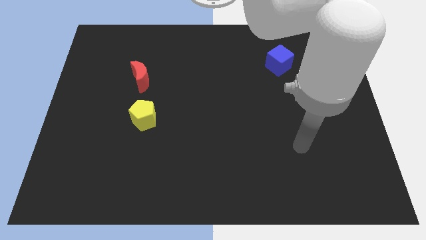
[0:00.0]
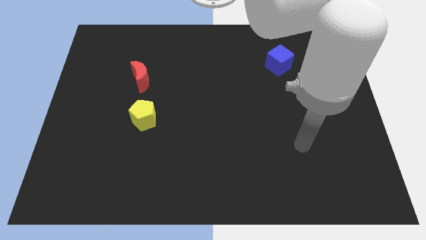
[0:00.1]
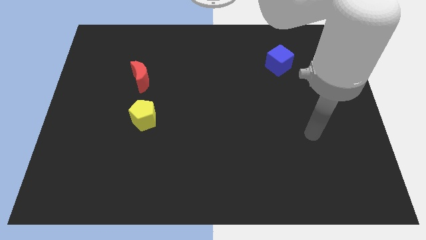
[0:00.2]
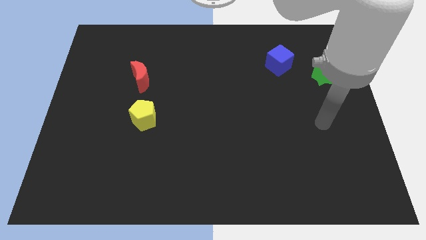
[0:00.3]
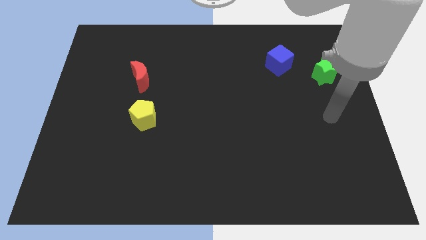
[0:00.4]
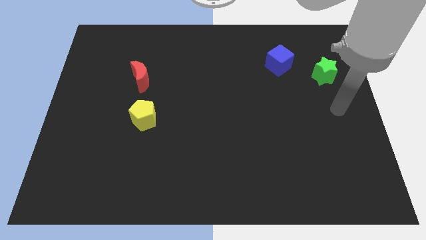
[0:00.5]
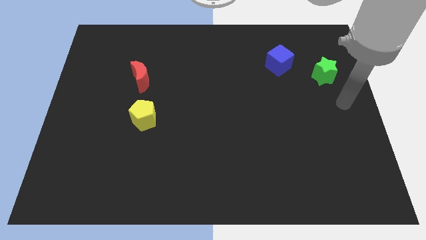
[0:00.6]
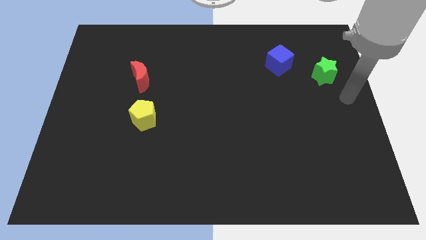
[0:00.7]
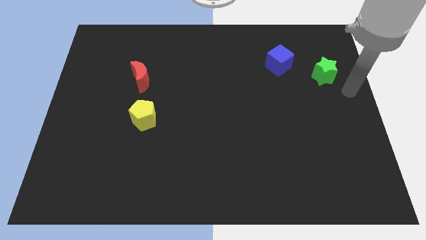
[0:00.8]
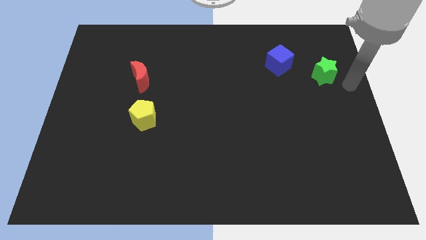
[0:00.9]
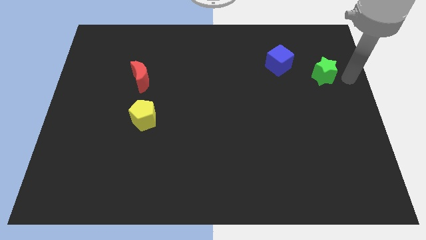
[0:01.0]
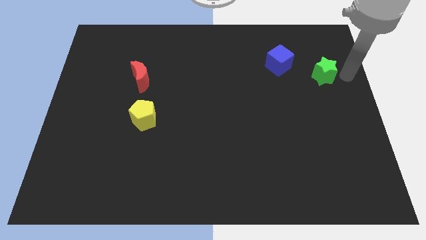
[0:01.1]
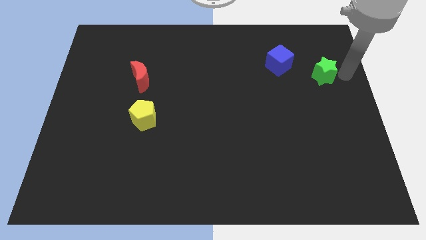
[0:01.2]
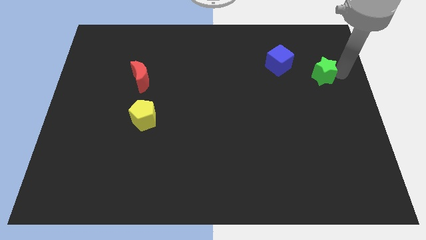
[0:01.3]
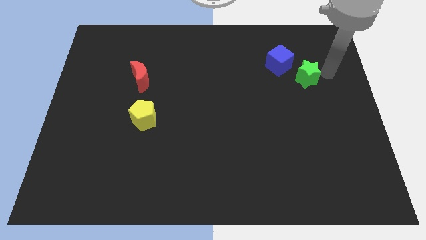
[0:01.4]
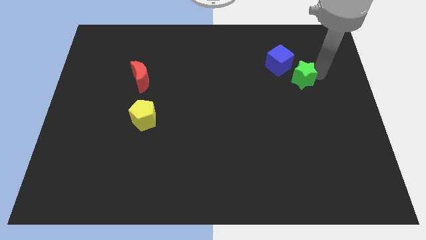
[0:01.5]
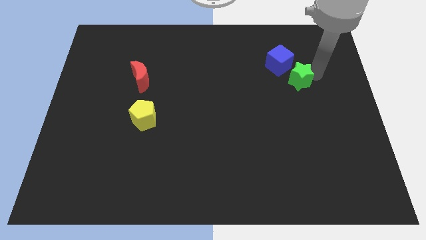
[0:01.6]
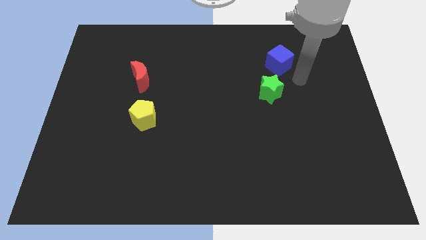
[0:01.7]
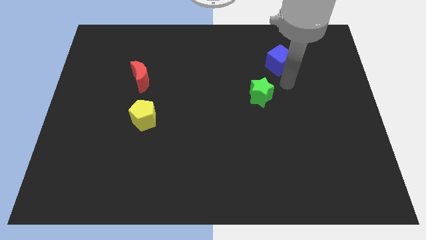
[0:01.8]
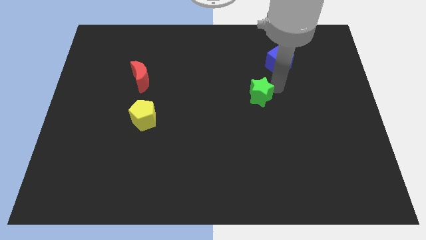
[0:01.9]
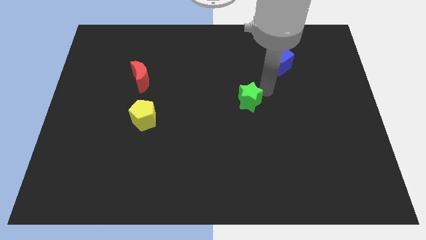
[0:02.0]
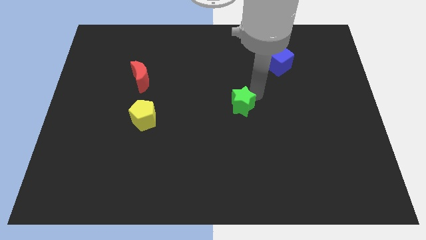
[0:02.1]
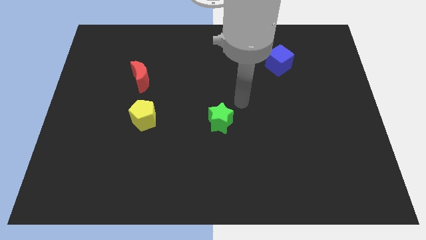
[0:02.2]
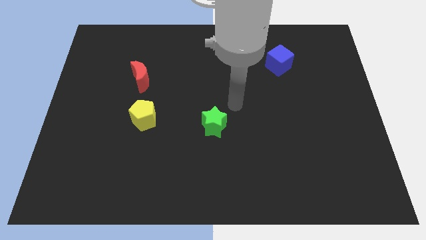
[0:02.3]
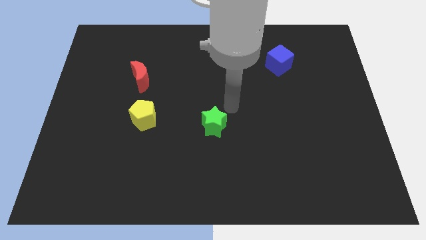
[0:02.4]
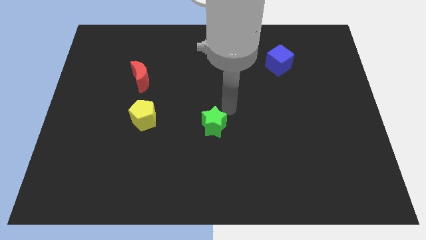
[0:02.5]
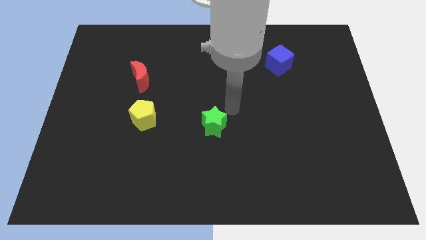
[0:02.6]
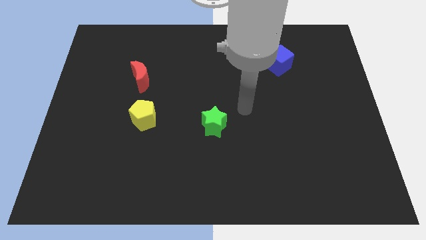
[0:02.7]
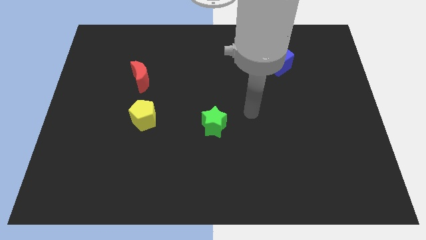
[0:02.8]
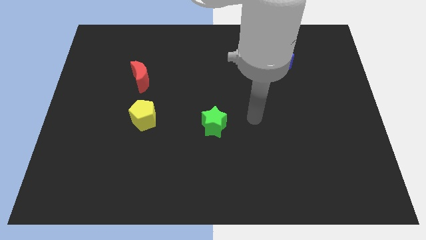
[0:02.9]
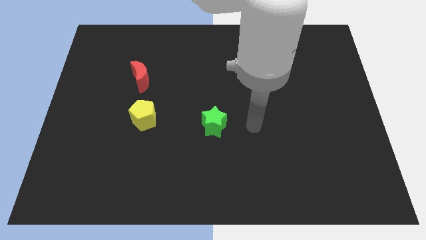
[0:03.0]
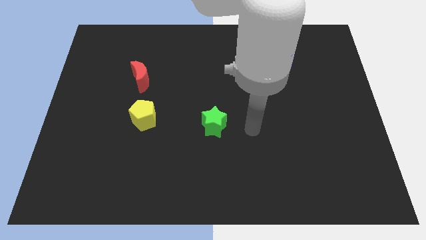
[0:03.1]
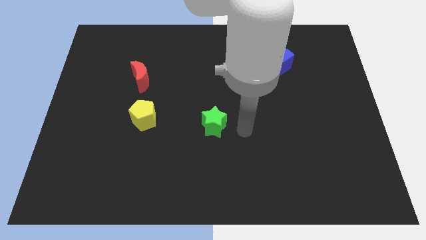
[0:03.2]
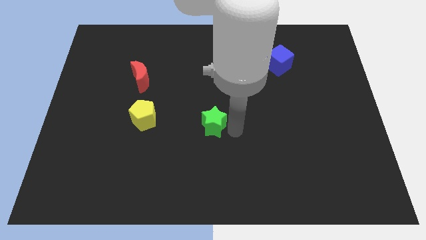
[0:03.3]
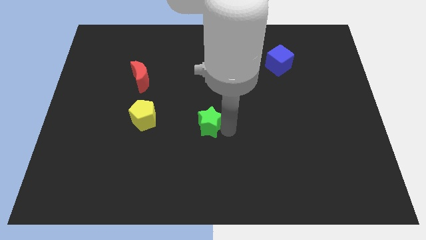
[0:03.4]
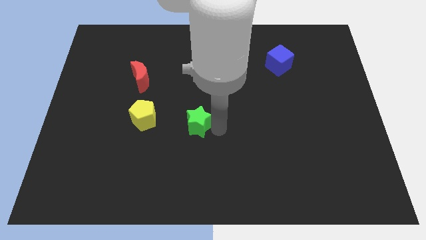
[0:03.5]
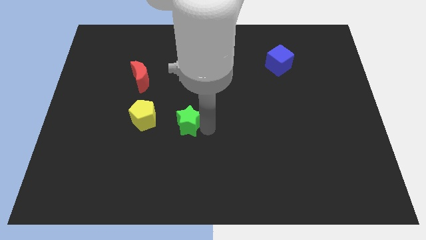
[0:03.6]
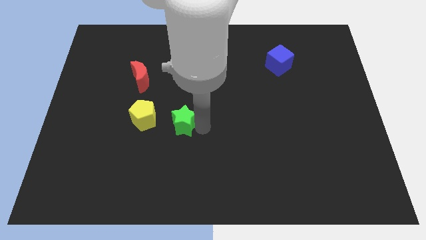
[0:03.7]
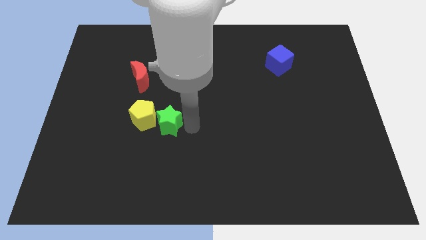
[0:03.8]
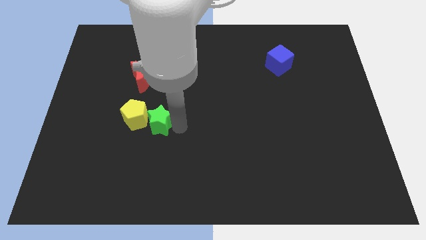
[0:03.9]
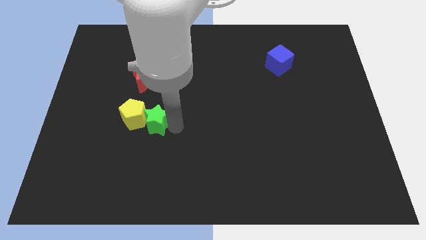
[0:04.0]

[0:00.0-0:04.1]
push the green block close to the yellow block

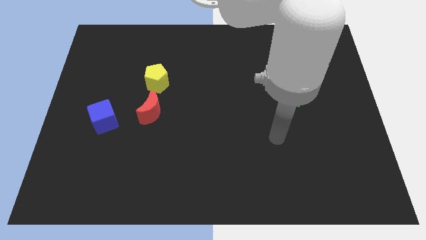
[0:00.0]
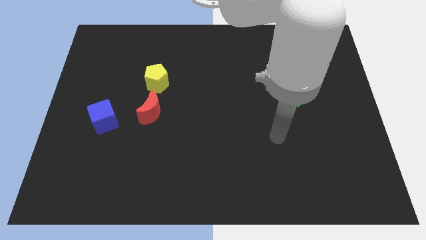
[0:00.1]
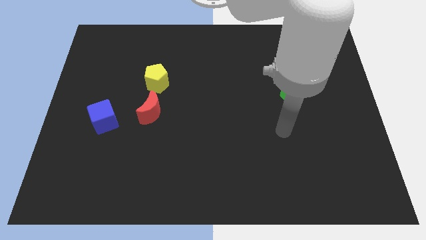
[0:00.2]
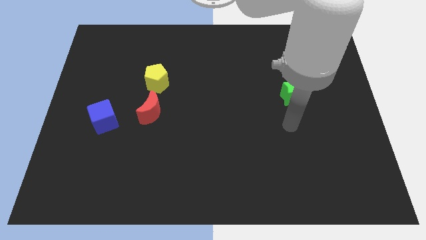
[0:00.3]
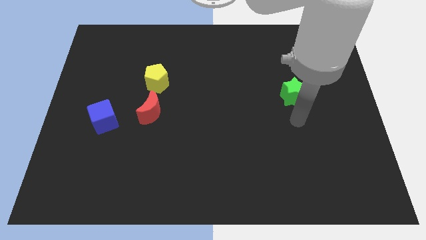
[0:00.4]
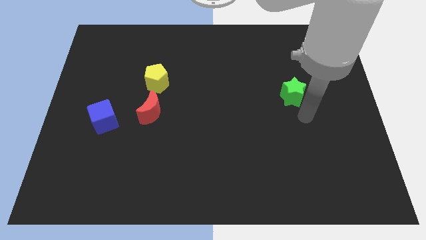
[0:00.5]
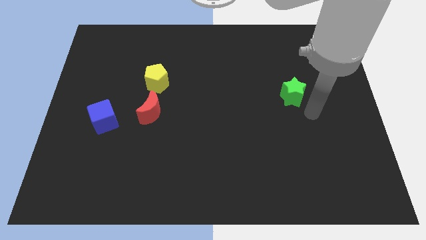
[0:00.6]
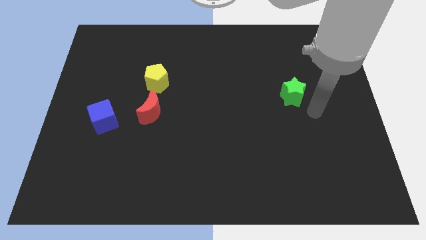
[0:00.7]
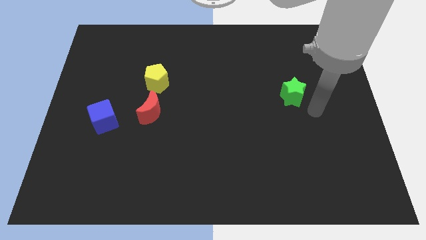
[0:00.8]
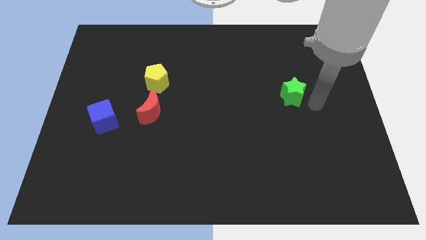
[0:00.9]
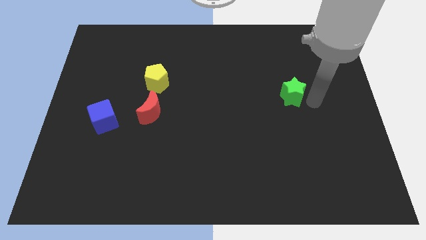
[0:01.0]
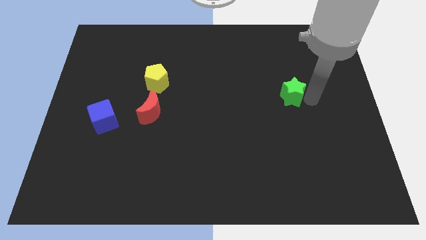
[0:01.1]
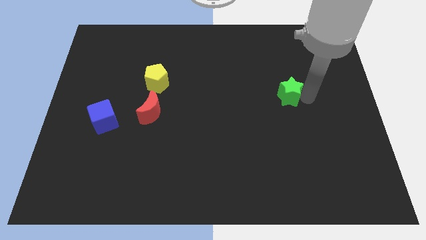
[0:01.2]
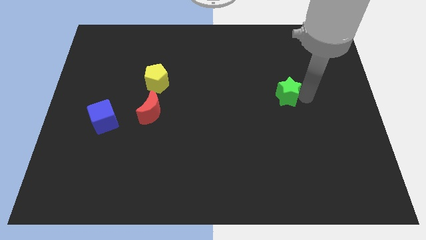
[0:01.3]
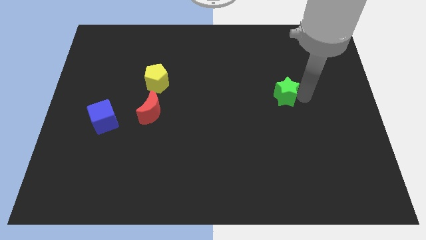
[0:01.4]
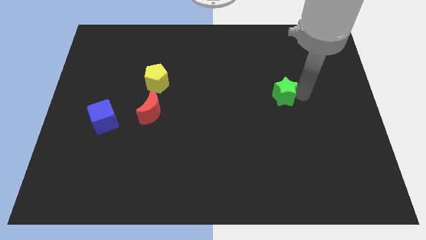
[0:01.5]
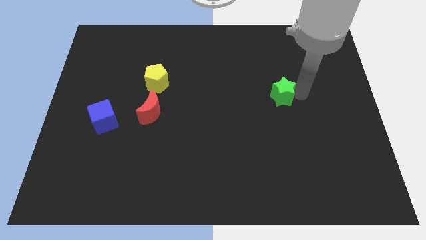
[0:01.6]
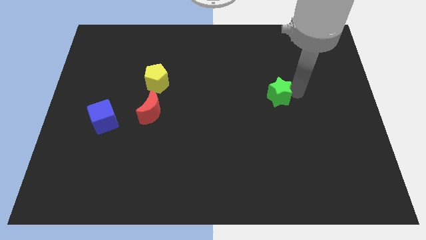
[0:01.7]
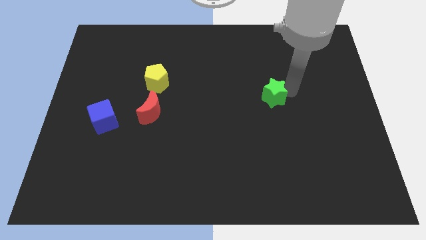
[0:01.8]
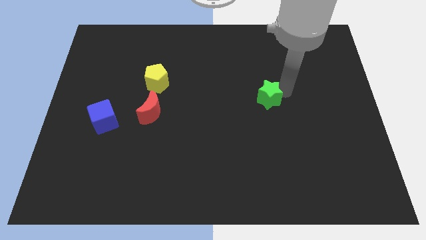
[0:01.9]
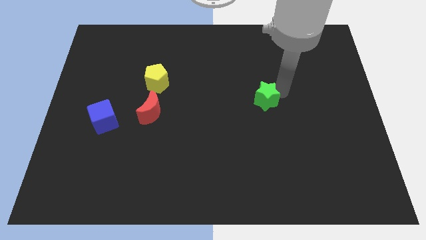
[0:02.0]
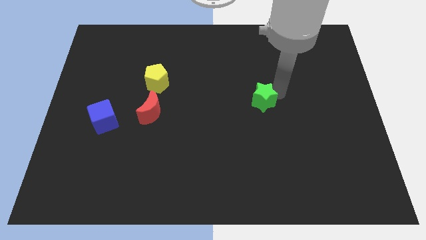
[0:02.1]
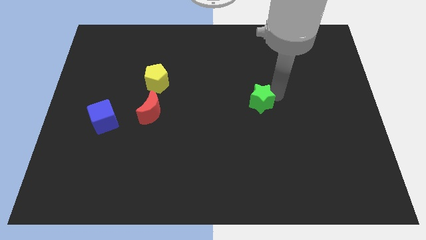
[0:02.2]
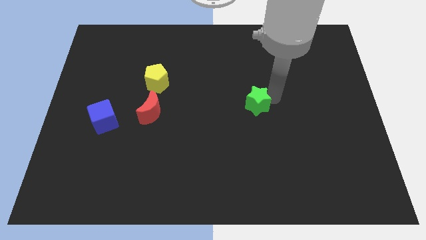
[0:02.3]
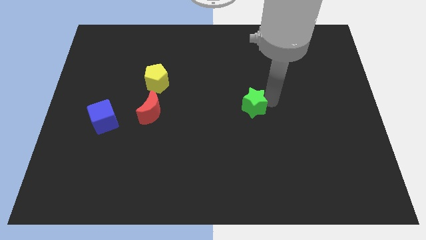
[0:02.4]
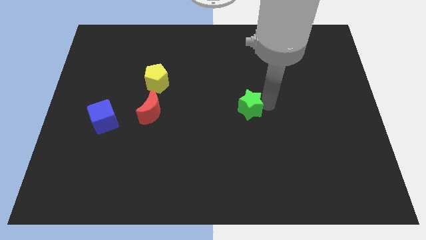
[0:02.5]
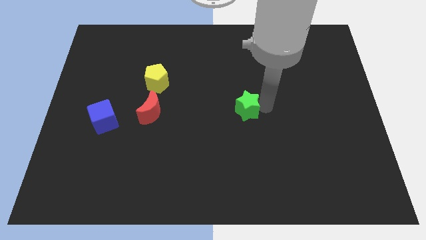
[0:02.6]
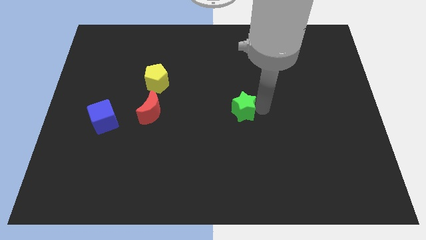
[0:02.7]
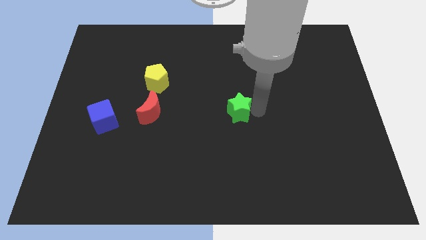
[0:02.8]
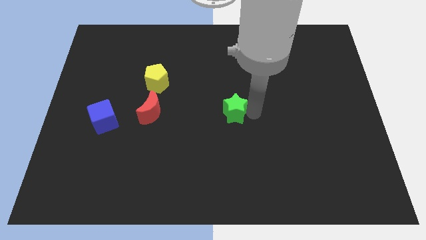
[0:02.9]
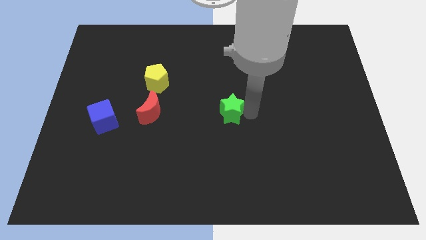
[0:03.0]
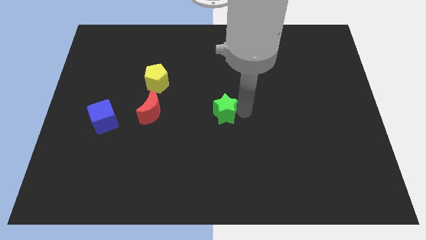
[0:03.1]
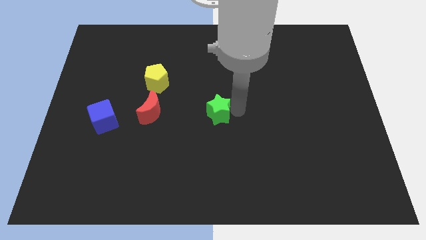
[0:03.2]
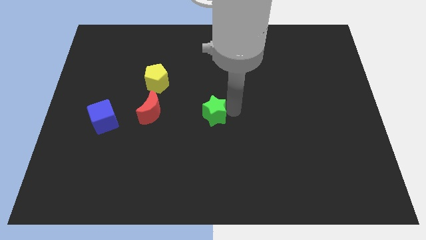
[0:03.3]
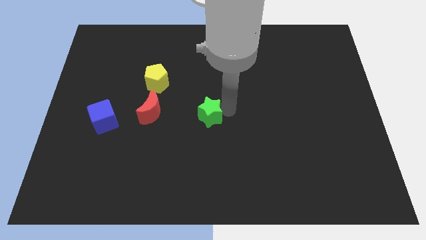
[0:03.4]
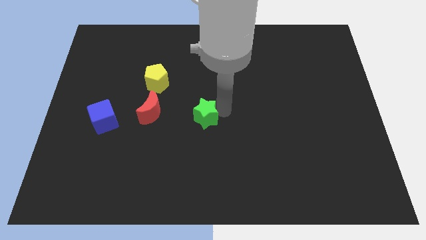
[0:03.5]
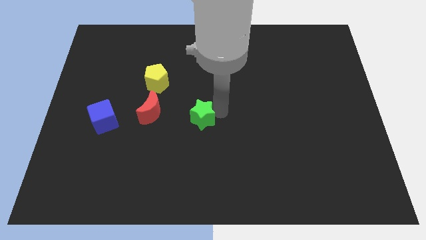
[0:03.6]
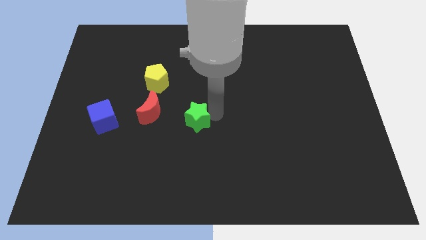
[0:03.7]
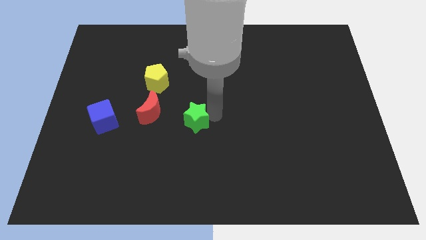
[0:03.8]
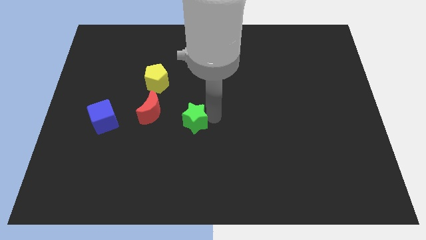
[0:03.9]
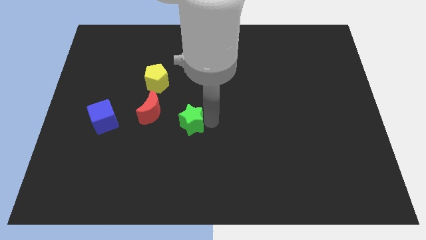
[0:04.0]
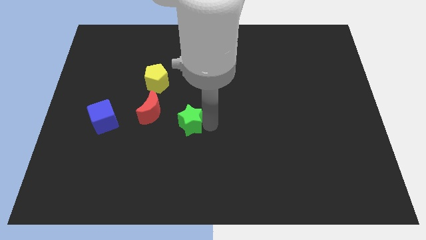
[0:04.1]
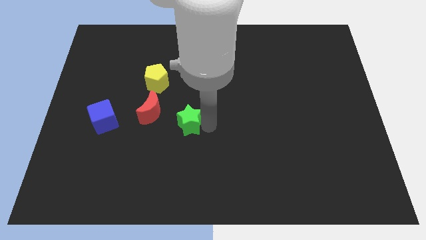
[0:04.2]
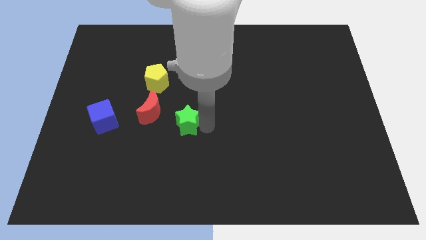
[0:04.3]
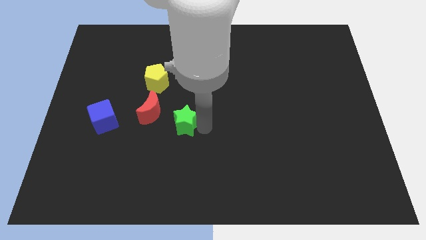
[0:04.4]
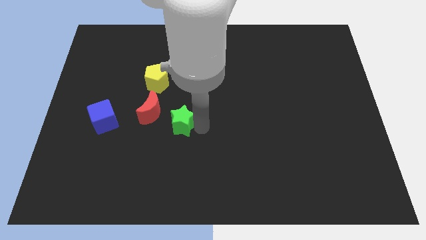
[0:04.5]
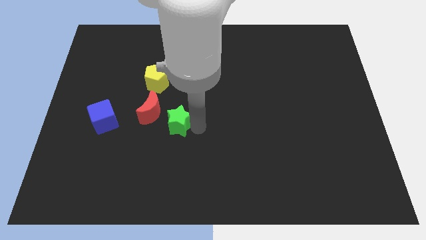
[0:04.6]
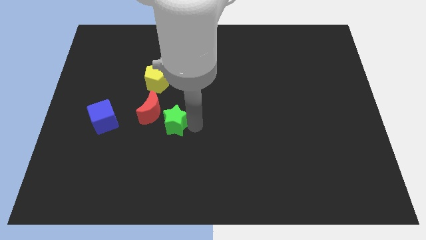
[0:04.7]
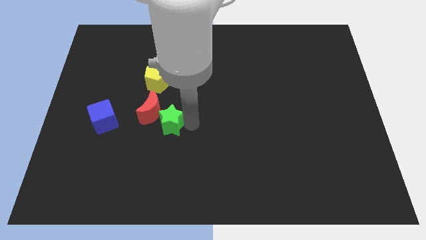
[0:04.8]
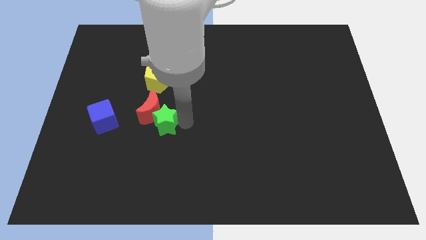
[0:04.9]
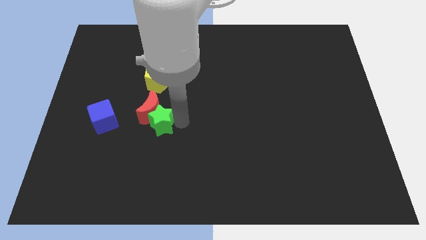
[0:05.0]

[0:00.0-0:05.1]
slide the star to the moon
